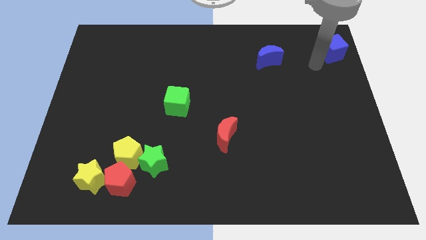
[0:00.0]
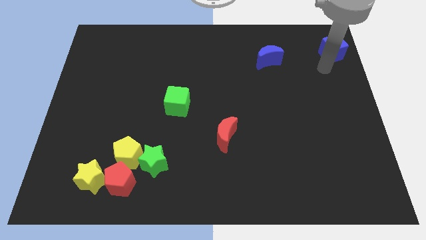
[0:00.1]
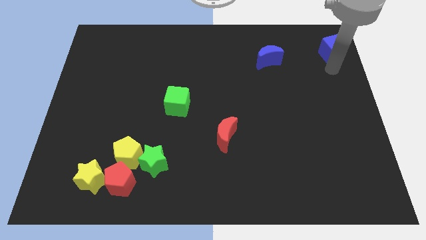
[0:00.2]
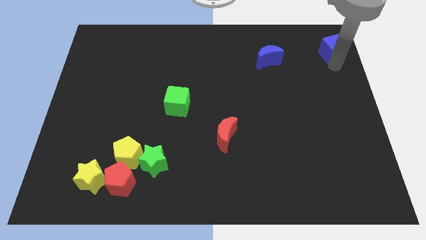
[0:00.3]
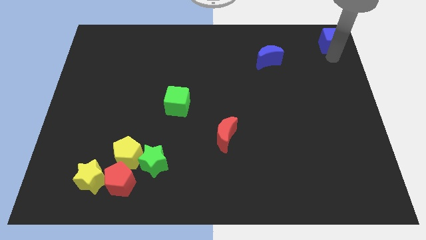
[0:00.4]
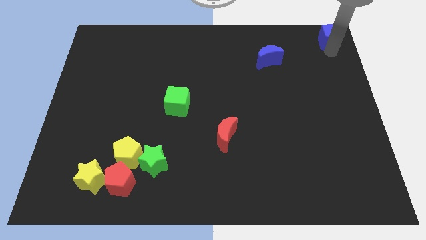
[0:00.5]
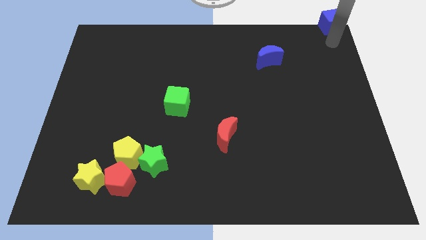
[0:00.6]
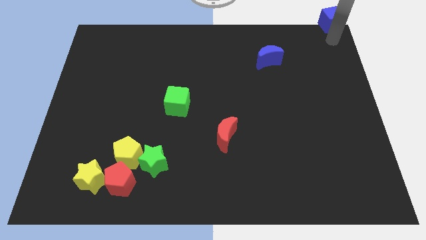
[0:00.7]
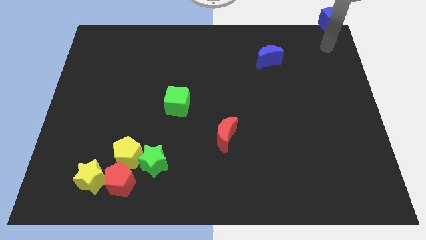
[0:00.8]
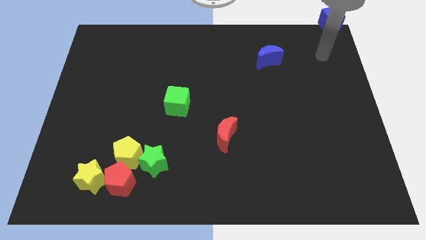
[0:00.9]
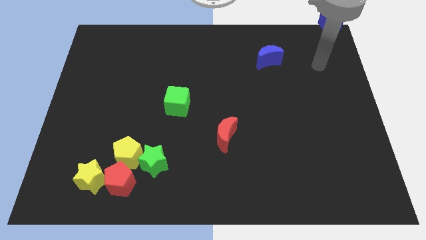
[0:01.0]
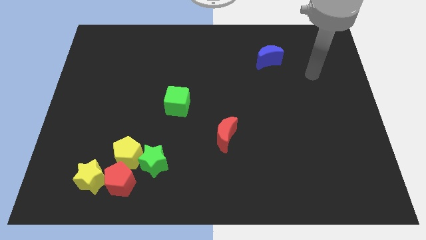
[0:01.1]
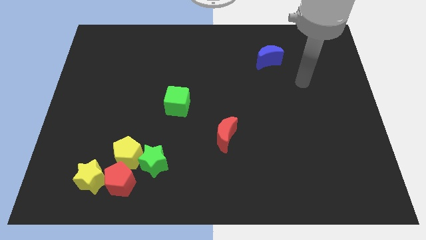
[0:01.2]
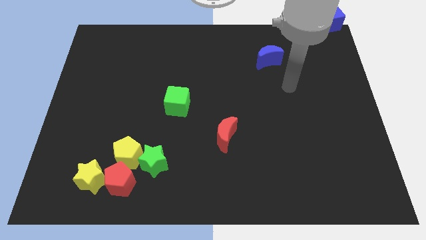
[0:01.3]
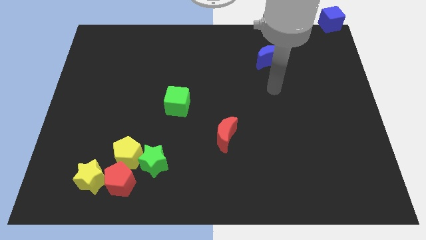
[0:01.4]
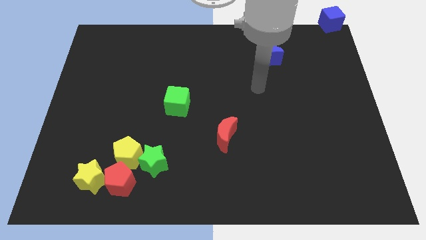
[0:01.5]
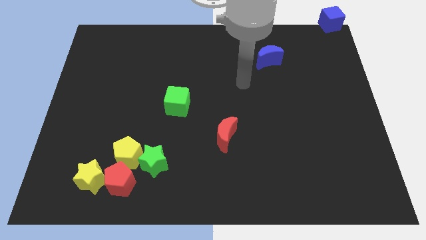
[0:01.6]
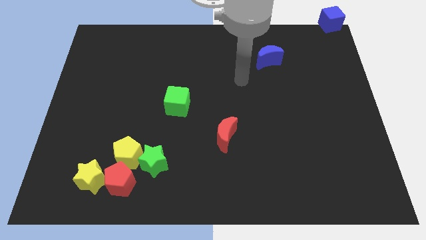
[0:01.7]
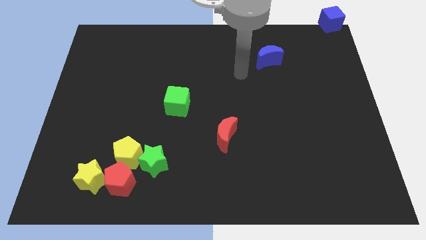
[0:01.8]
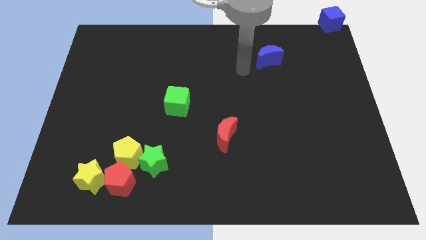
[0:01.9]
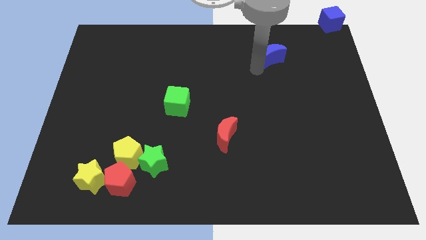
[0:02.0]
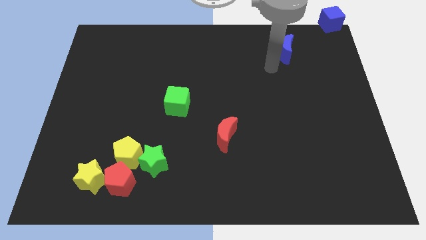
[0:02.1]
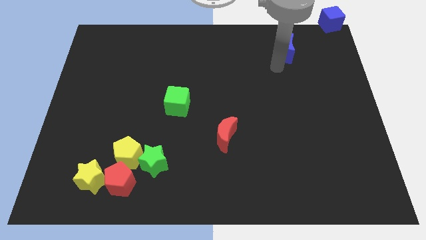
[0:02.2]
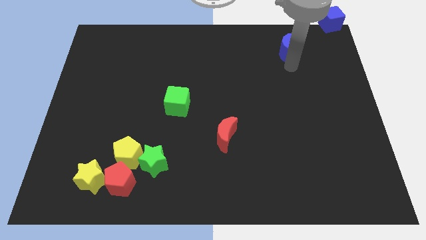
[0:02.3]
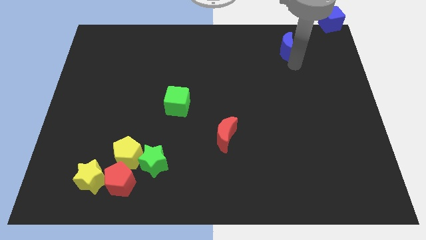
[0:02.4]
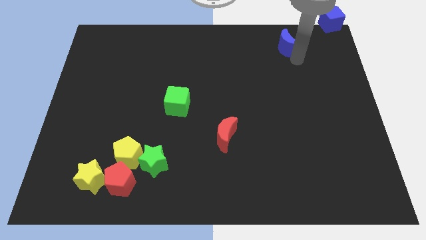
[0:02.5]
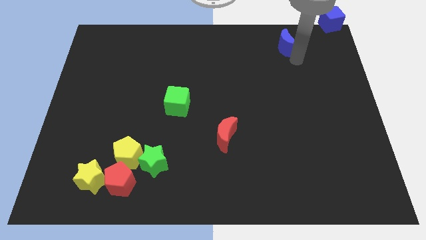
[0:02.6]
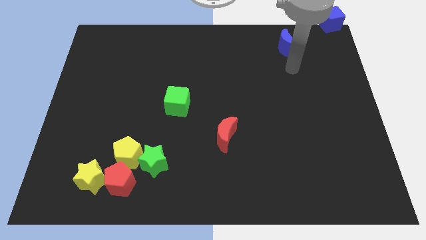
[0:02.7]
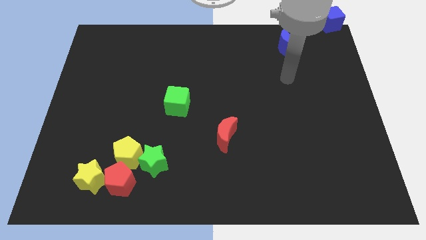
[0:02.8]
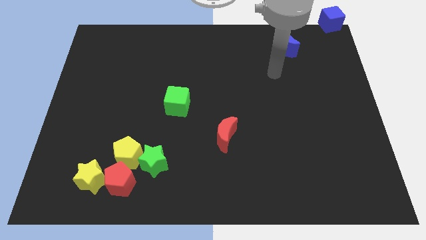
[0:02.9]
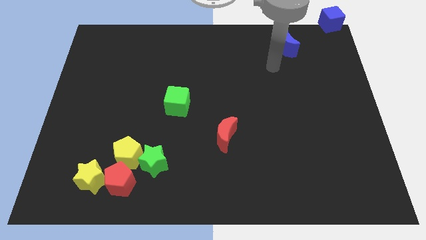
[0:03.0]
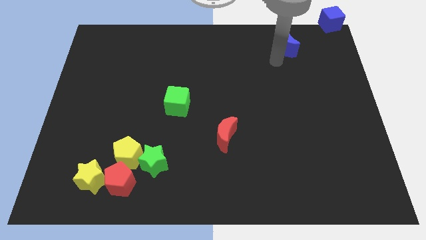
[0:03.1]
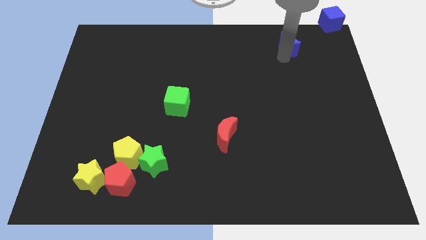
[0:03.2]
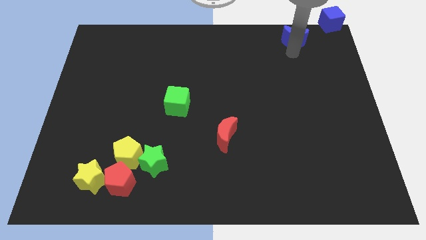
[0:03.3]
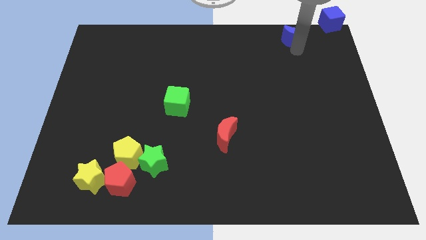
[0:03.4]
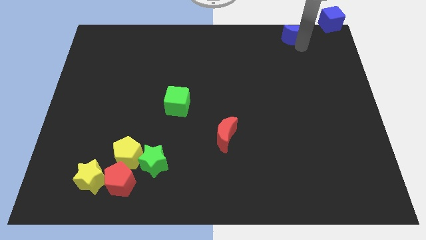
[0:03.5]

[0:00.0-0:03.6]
move the blue cube to the top right of the board

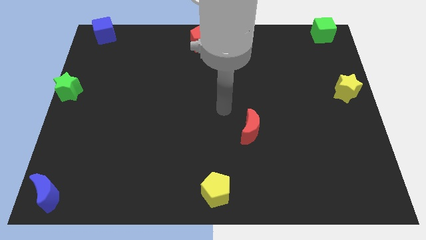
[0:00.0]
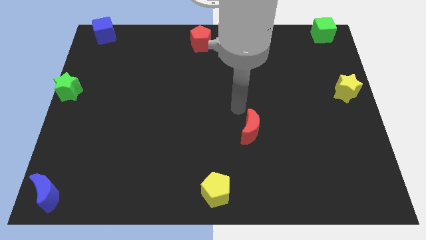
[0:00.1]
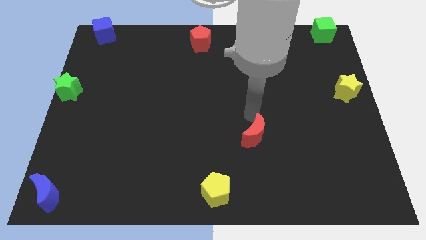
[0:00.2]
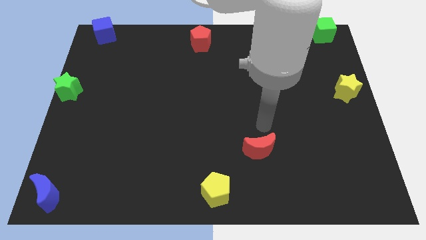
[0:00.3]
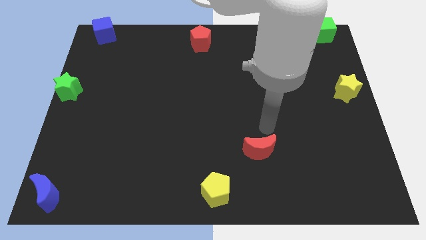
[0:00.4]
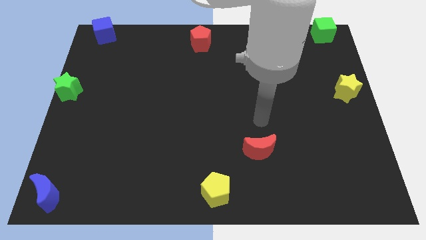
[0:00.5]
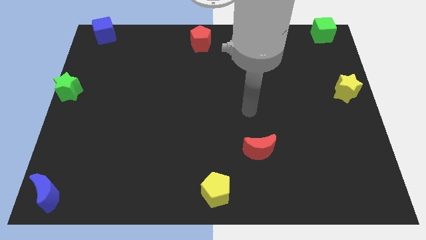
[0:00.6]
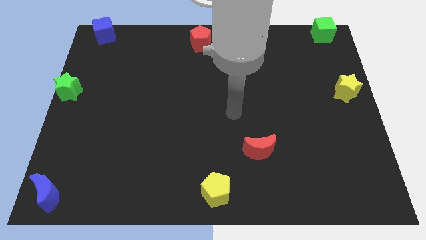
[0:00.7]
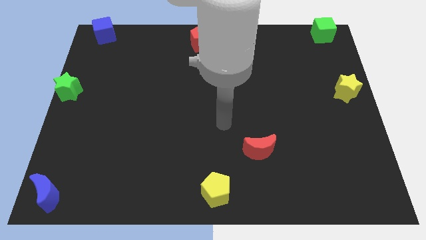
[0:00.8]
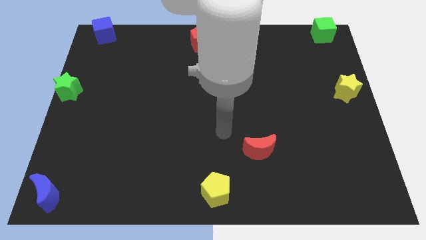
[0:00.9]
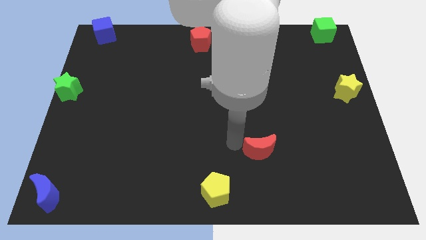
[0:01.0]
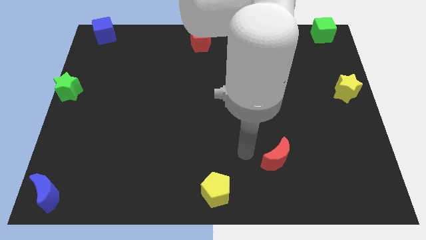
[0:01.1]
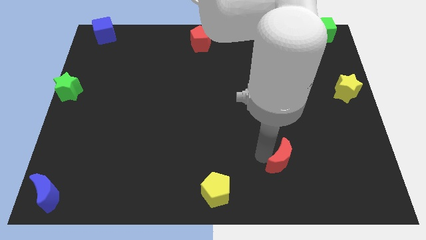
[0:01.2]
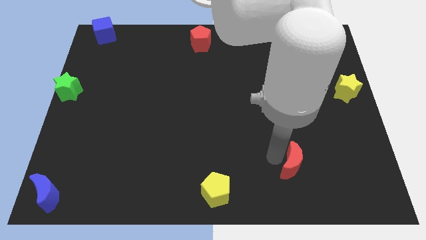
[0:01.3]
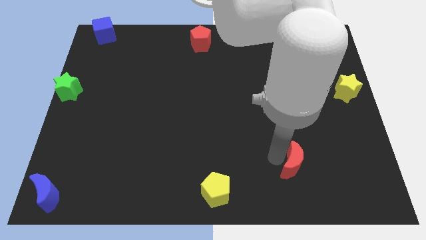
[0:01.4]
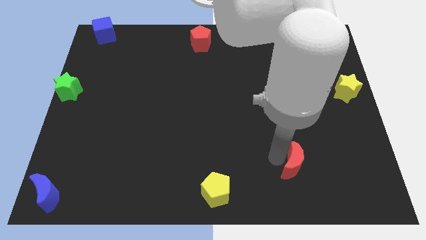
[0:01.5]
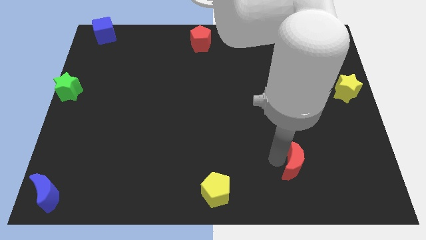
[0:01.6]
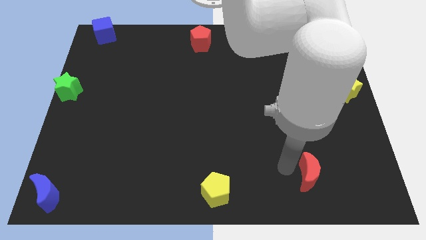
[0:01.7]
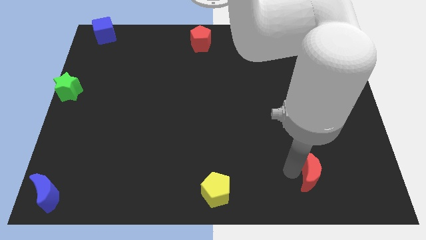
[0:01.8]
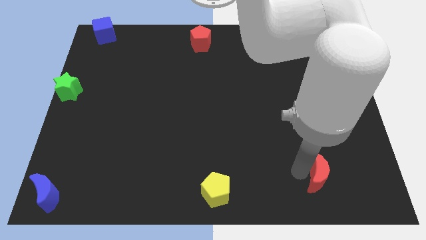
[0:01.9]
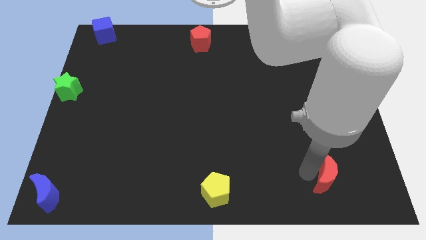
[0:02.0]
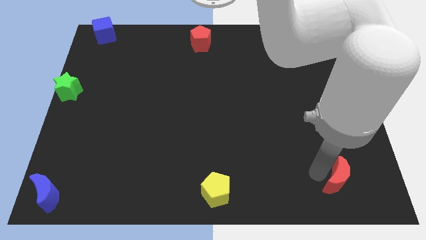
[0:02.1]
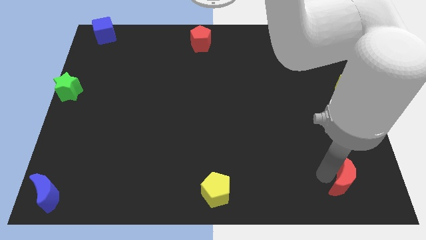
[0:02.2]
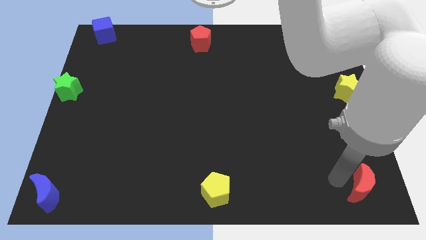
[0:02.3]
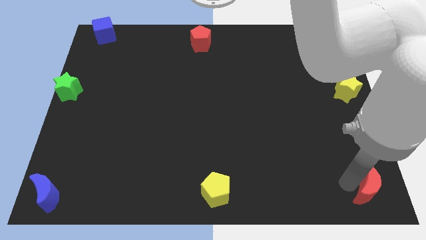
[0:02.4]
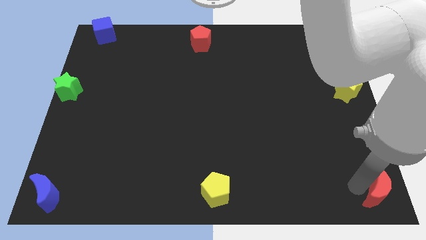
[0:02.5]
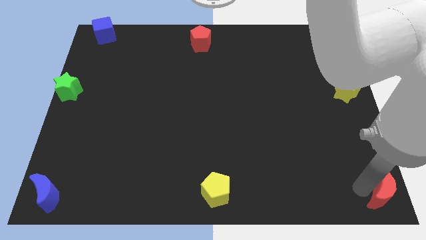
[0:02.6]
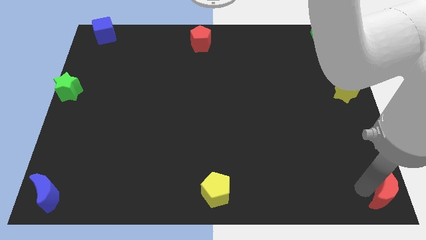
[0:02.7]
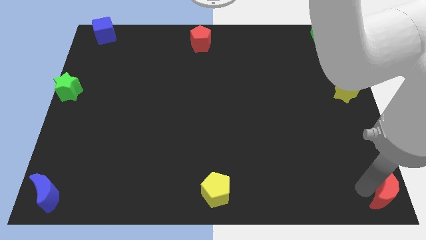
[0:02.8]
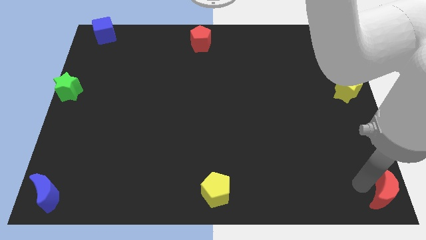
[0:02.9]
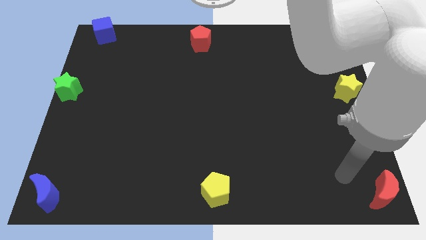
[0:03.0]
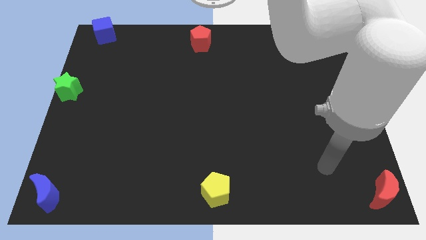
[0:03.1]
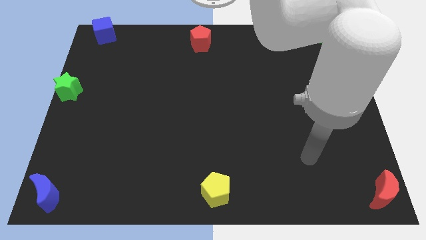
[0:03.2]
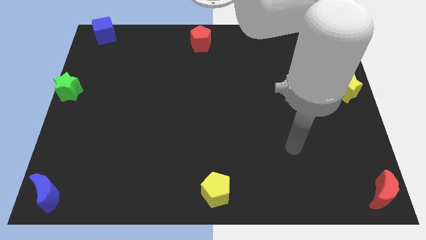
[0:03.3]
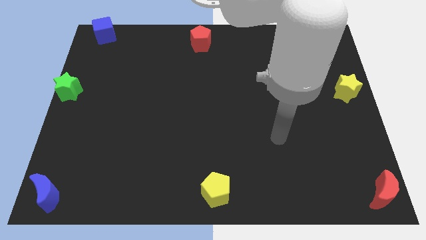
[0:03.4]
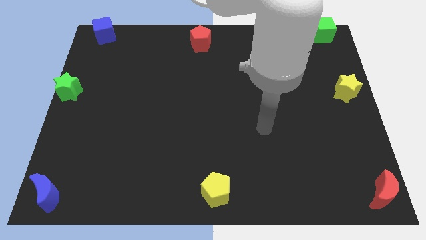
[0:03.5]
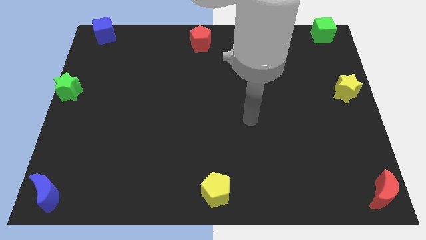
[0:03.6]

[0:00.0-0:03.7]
place the red moon to the bottom right of the board

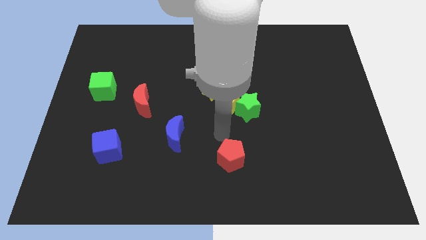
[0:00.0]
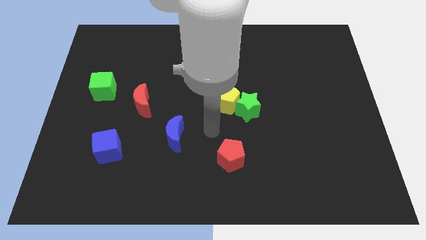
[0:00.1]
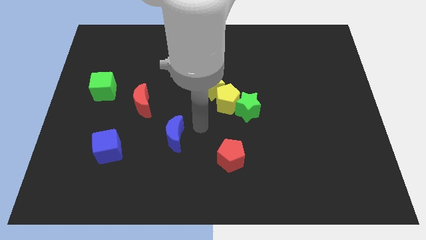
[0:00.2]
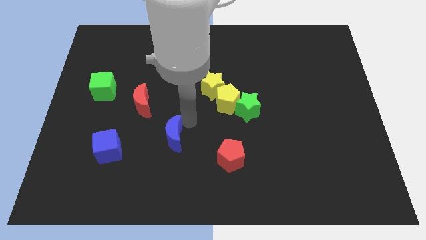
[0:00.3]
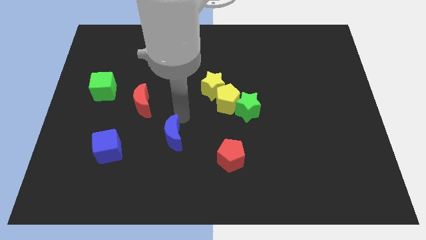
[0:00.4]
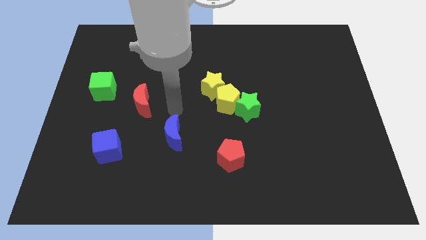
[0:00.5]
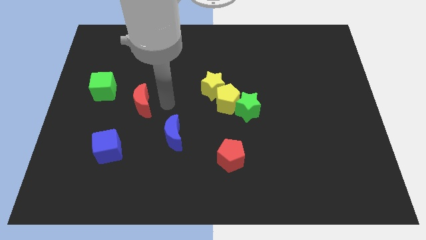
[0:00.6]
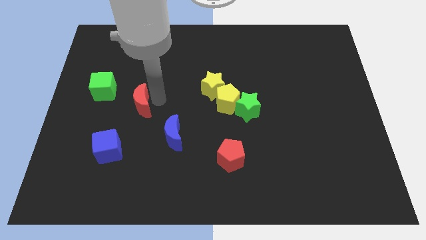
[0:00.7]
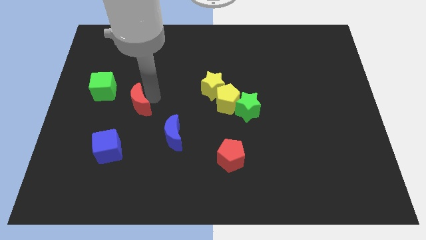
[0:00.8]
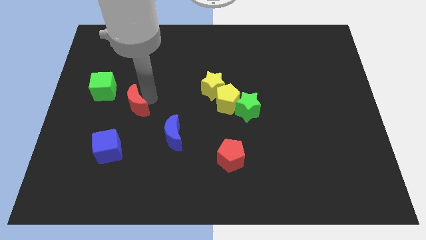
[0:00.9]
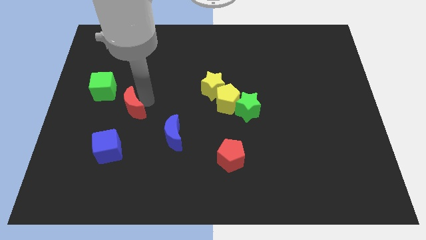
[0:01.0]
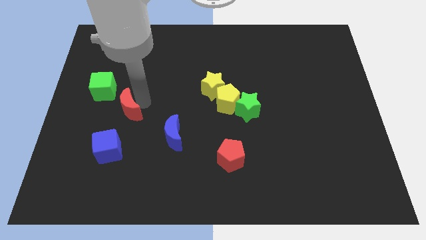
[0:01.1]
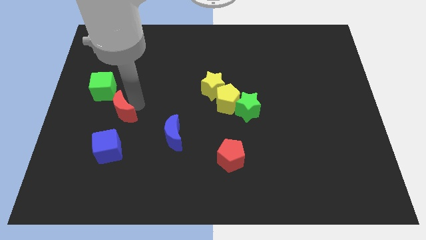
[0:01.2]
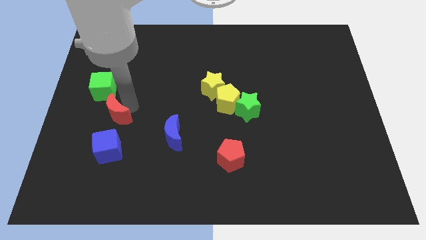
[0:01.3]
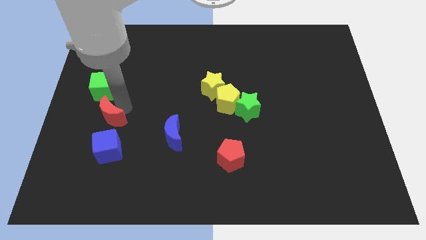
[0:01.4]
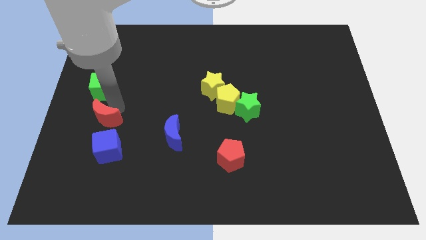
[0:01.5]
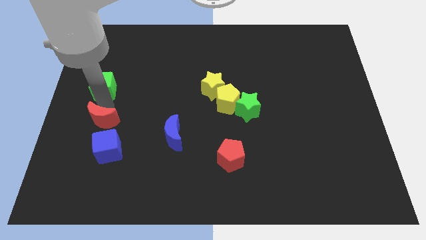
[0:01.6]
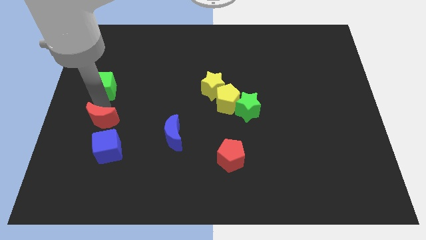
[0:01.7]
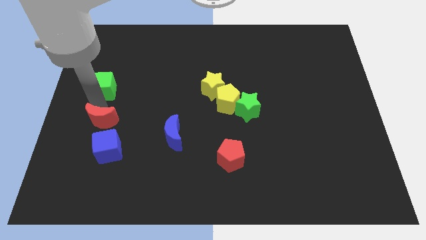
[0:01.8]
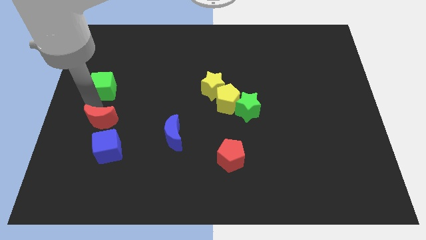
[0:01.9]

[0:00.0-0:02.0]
move the red moon between green and blue cubes
